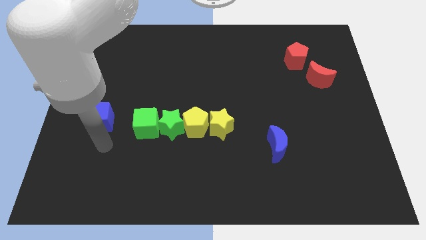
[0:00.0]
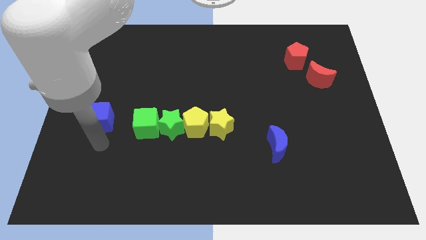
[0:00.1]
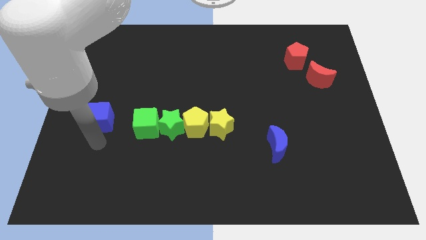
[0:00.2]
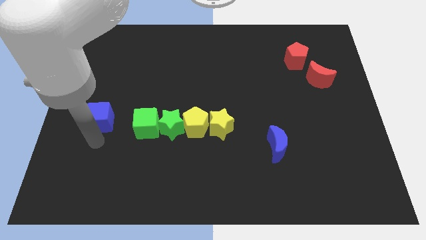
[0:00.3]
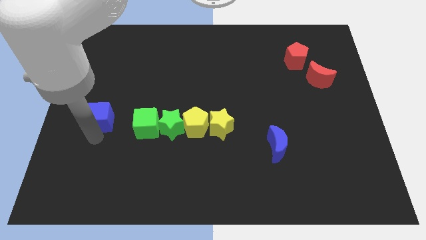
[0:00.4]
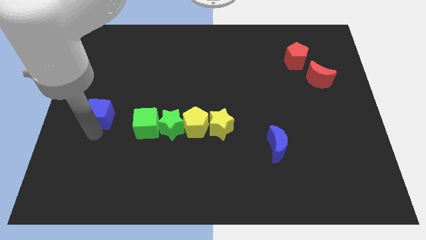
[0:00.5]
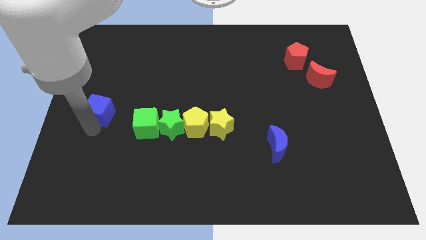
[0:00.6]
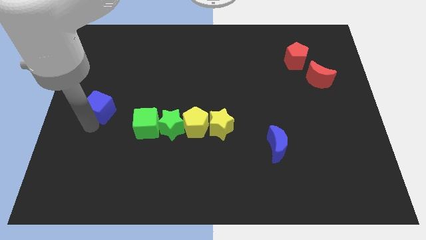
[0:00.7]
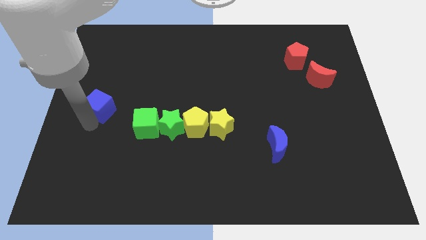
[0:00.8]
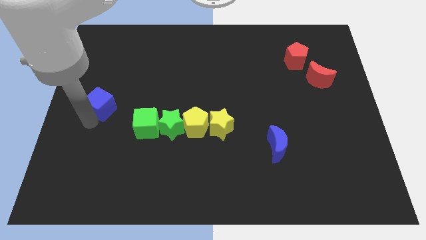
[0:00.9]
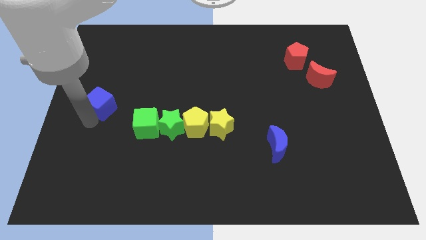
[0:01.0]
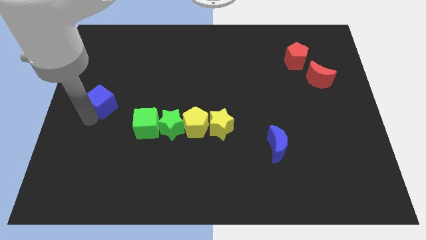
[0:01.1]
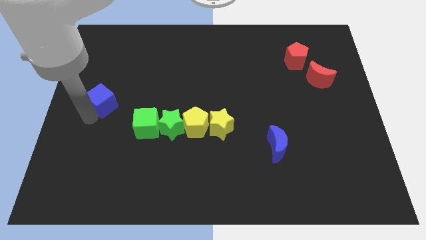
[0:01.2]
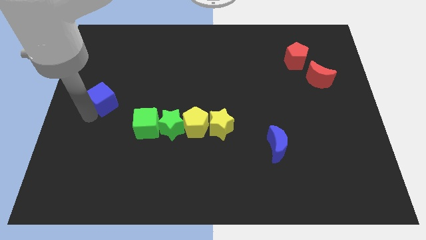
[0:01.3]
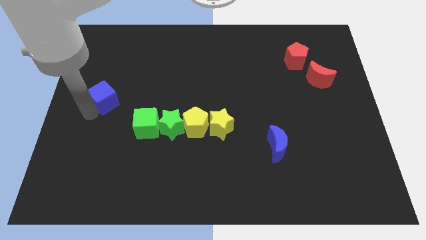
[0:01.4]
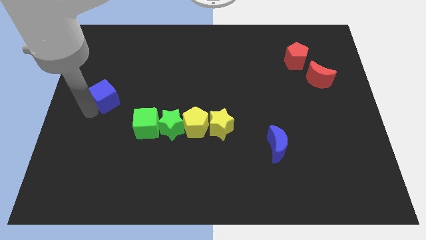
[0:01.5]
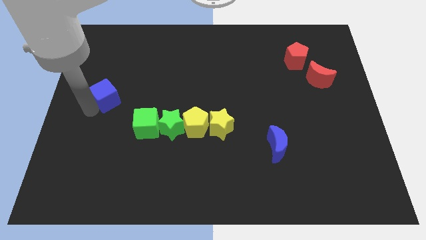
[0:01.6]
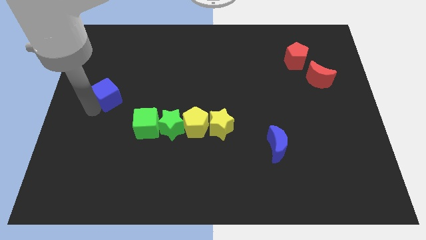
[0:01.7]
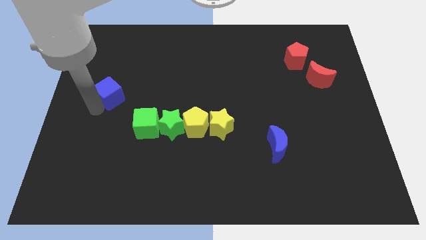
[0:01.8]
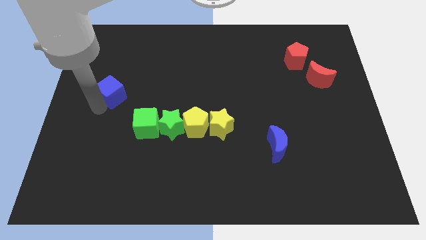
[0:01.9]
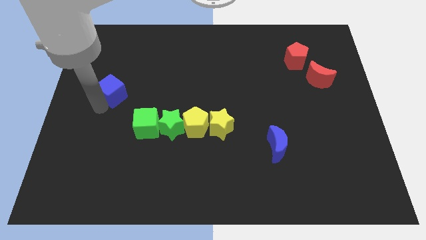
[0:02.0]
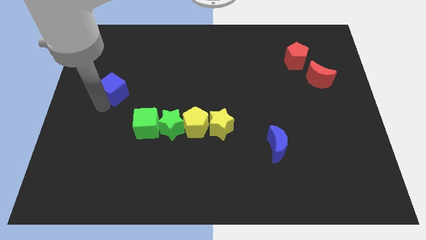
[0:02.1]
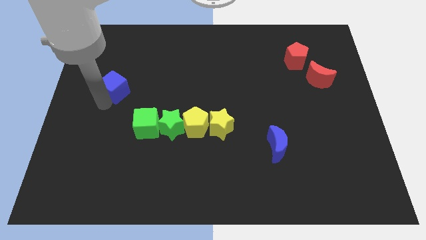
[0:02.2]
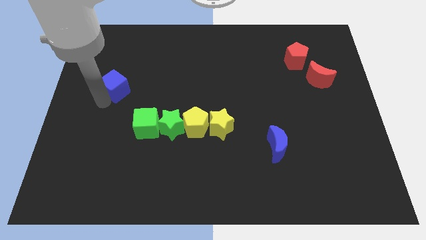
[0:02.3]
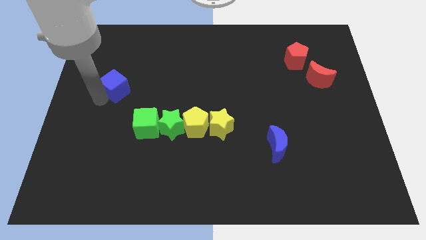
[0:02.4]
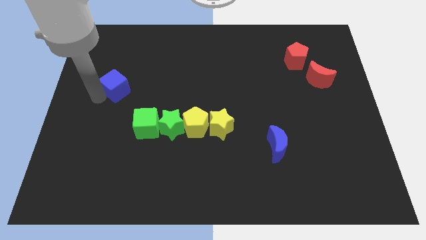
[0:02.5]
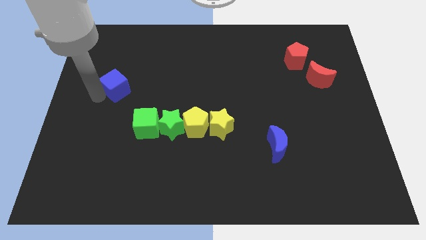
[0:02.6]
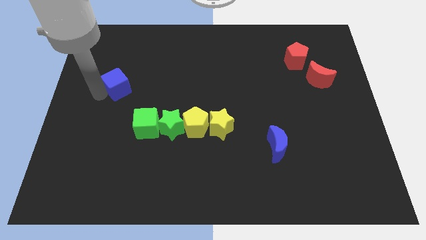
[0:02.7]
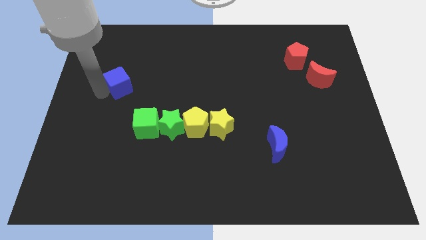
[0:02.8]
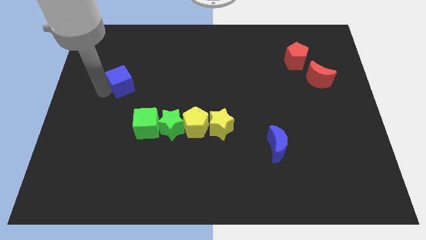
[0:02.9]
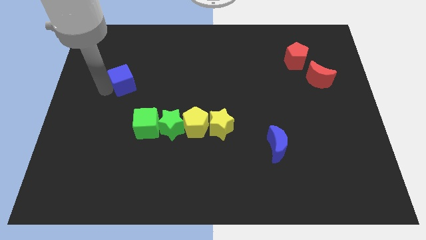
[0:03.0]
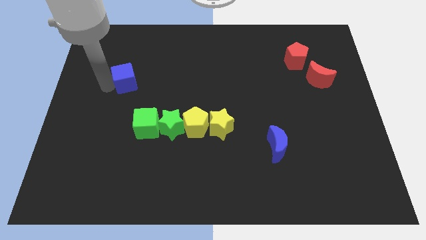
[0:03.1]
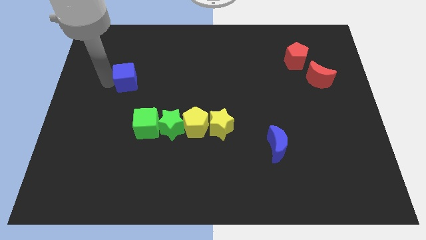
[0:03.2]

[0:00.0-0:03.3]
move the blue cube upwards slightly

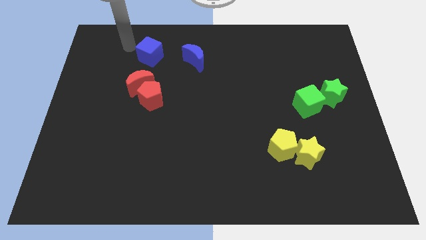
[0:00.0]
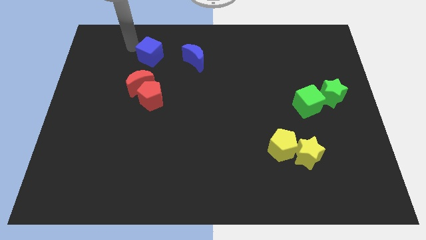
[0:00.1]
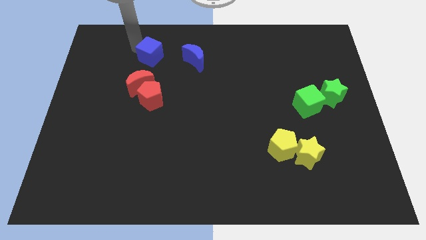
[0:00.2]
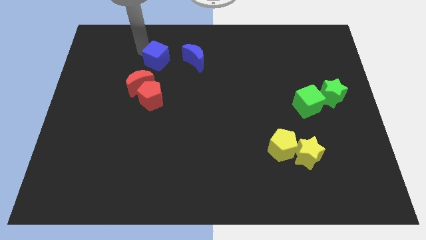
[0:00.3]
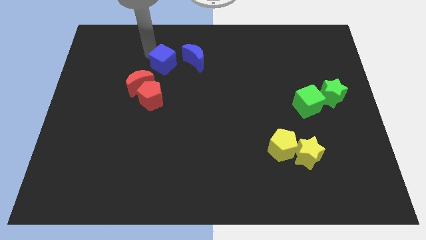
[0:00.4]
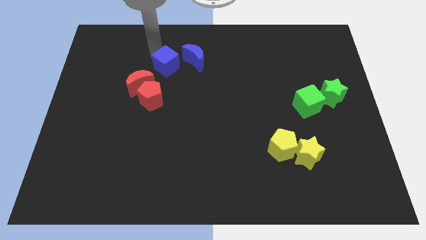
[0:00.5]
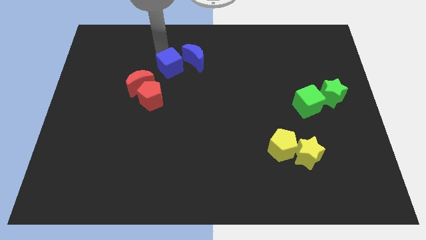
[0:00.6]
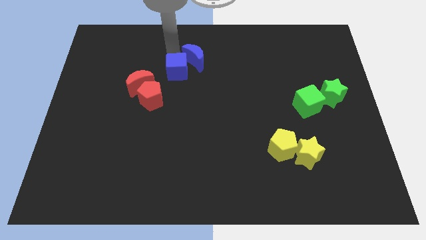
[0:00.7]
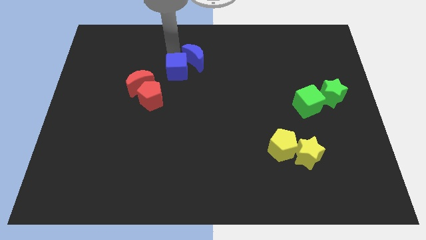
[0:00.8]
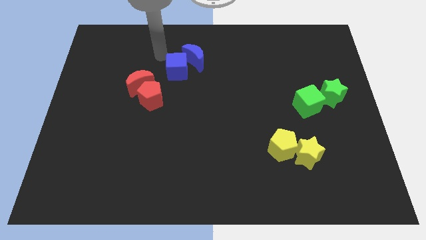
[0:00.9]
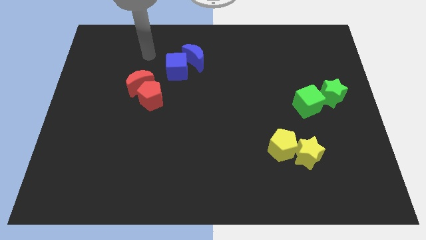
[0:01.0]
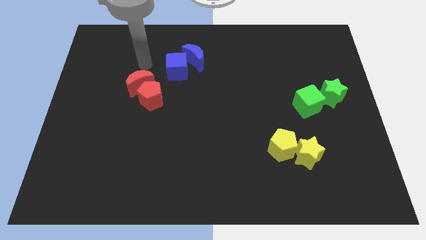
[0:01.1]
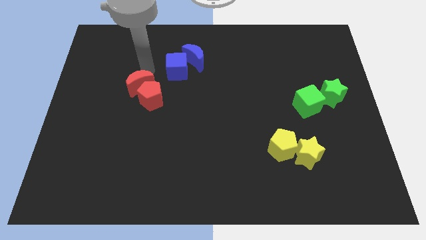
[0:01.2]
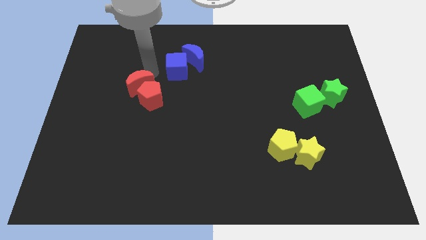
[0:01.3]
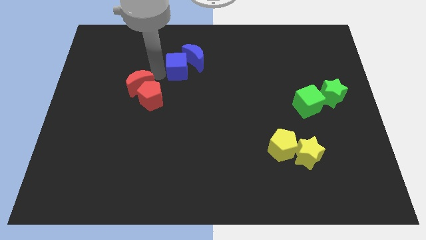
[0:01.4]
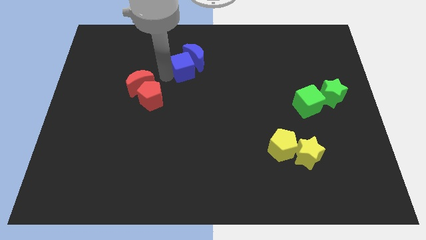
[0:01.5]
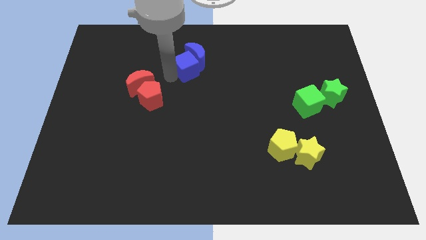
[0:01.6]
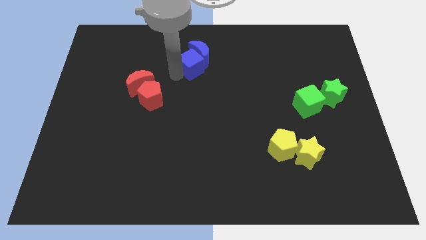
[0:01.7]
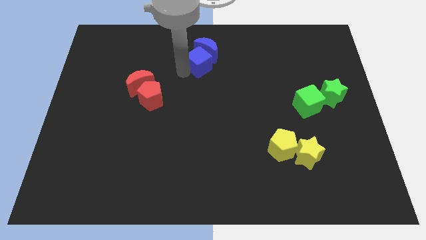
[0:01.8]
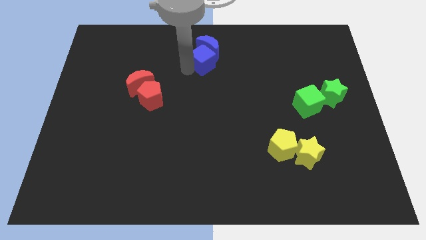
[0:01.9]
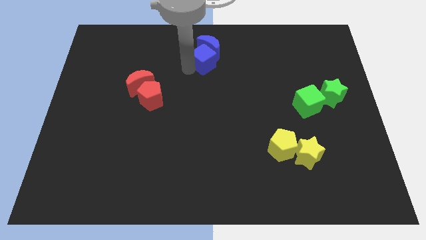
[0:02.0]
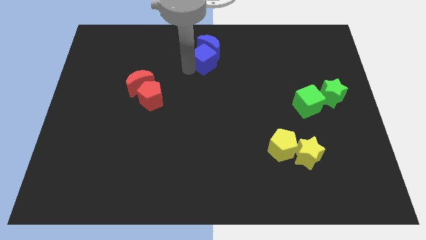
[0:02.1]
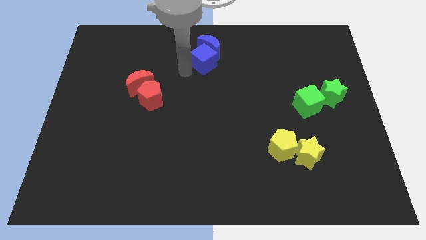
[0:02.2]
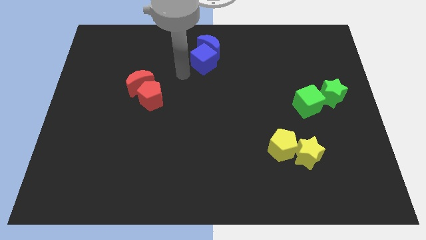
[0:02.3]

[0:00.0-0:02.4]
push the blue blocks to the top center of the board

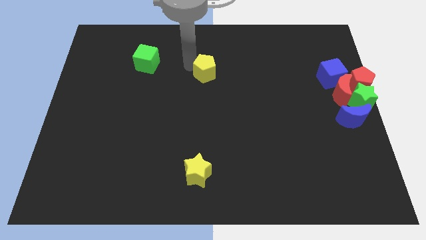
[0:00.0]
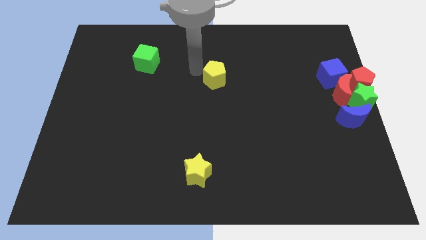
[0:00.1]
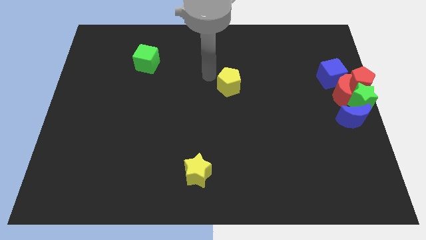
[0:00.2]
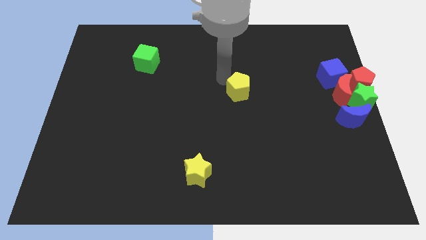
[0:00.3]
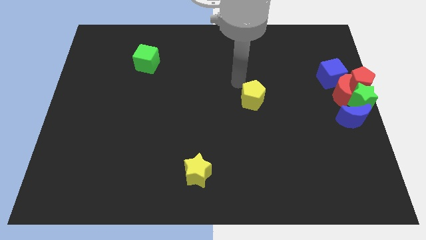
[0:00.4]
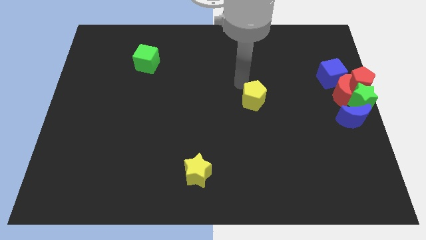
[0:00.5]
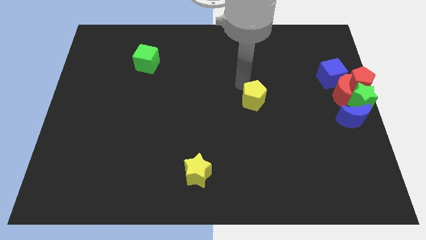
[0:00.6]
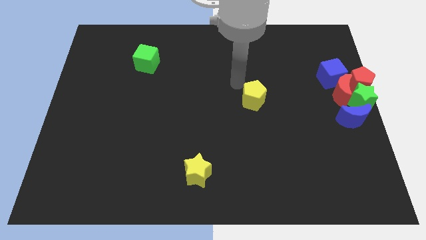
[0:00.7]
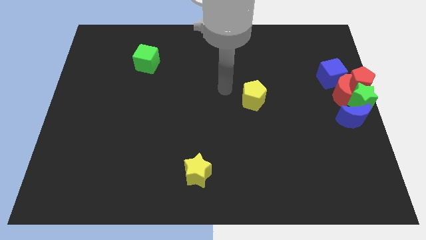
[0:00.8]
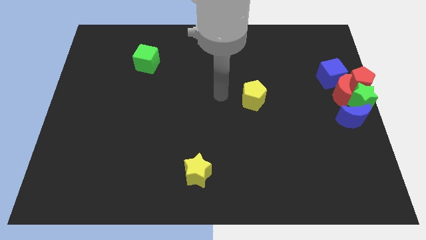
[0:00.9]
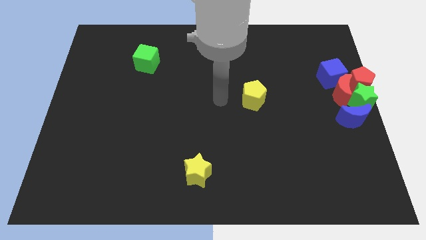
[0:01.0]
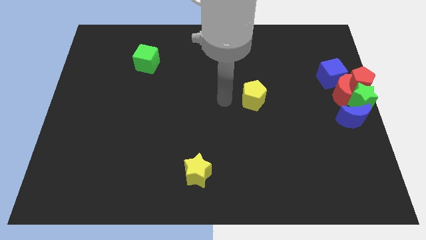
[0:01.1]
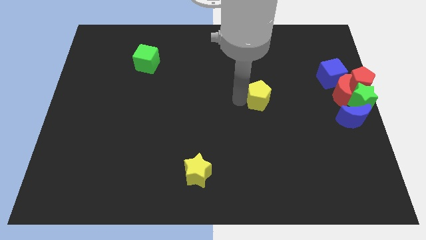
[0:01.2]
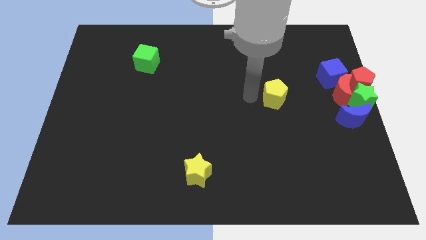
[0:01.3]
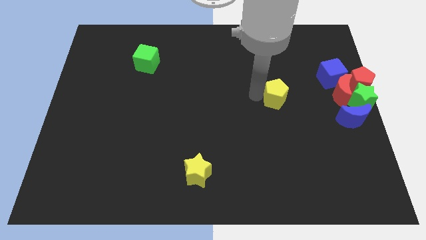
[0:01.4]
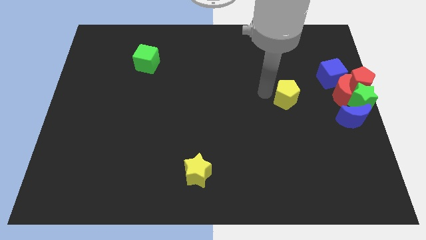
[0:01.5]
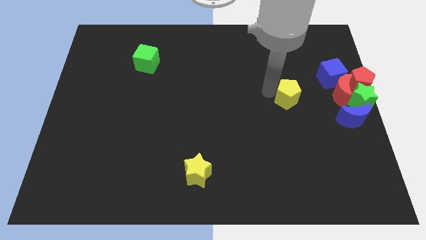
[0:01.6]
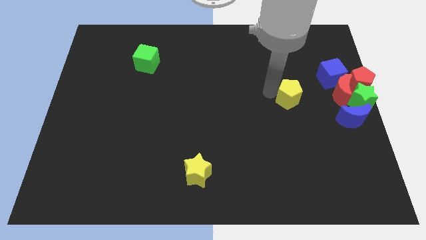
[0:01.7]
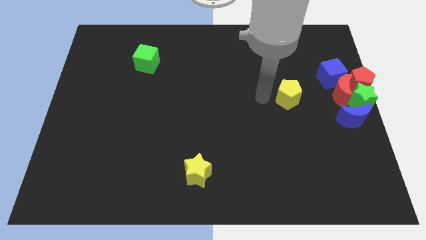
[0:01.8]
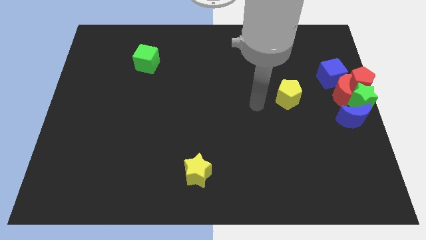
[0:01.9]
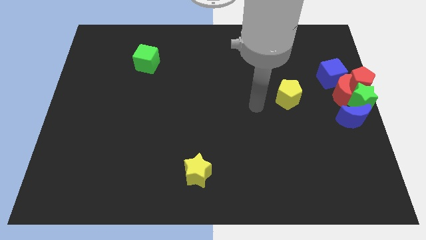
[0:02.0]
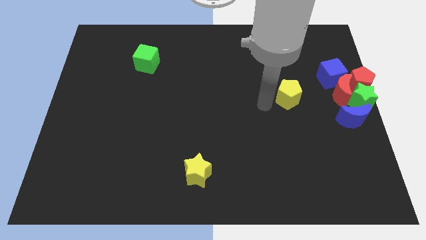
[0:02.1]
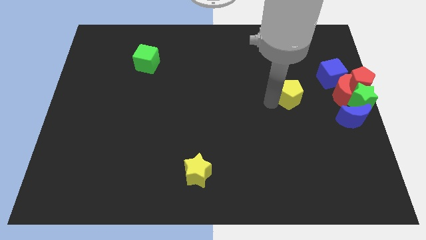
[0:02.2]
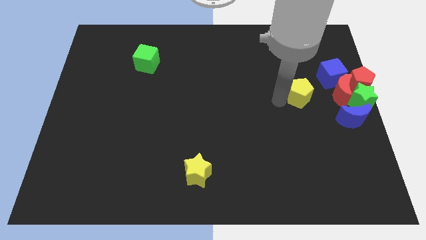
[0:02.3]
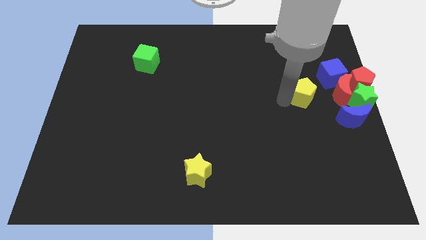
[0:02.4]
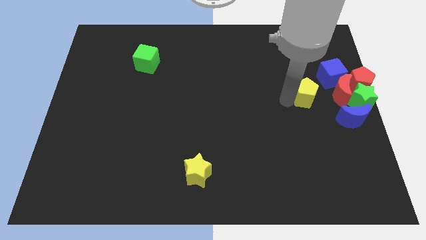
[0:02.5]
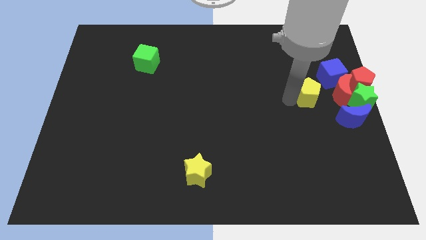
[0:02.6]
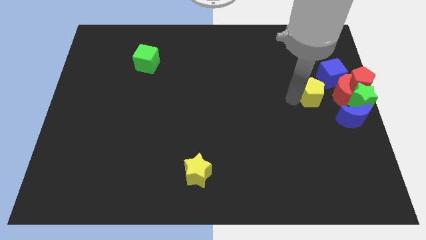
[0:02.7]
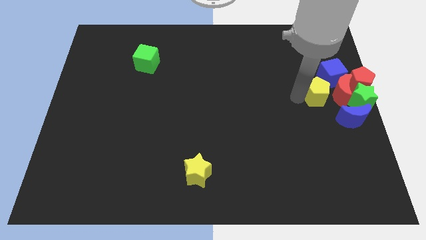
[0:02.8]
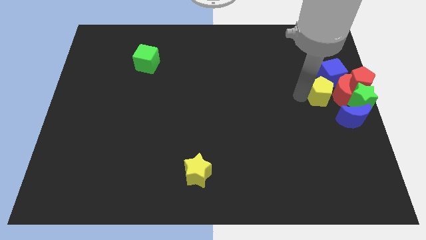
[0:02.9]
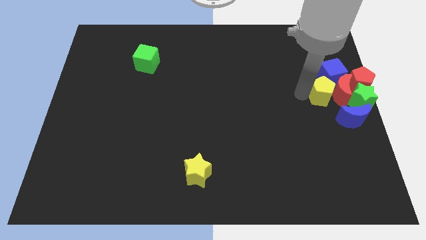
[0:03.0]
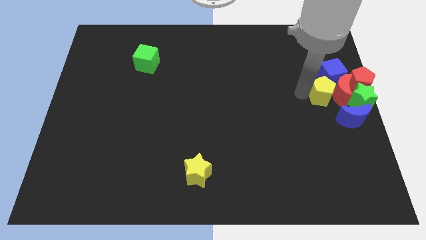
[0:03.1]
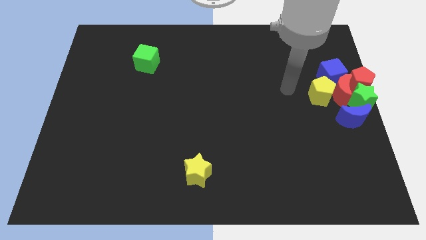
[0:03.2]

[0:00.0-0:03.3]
put the yellow pentagon next to the left side of the red moon
